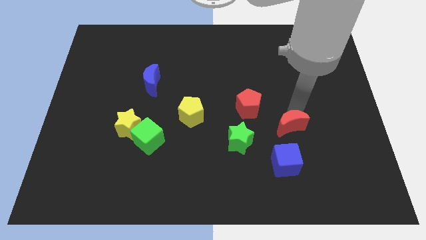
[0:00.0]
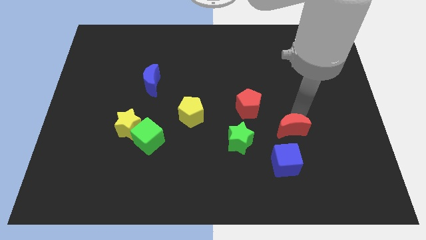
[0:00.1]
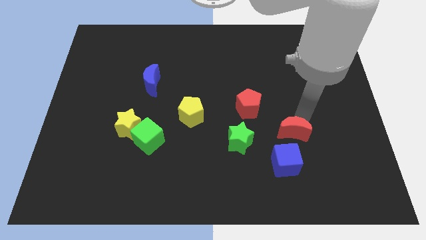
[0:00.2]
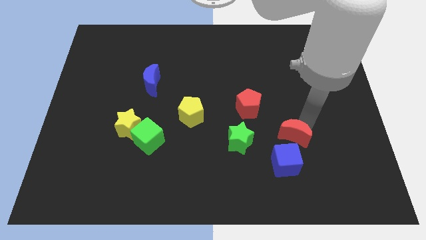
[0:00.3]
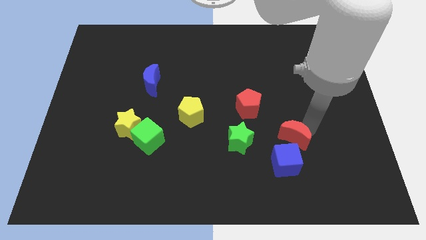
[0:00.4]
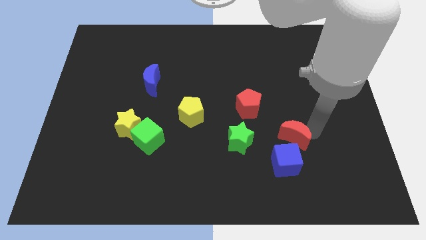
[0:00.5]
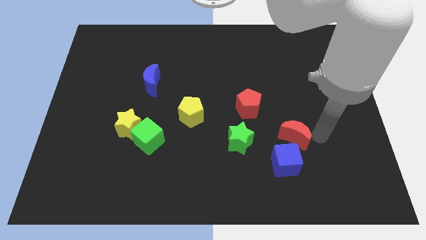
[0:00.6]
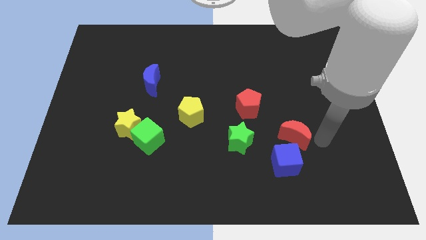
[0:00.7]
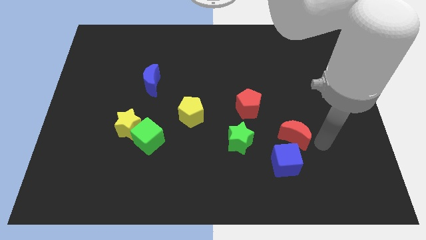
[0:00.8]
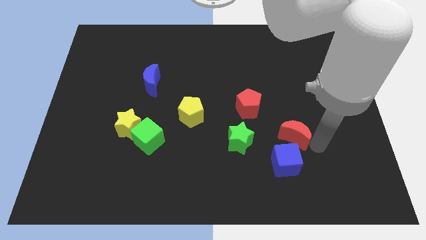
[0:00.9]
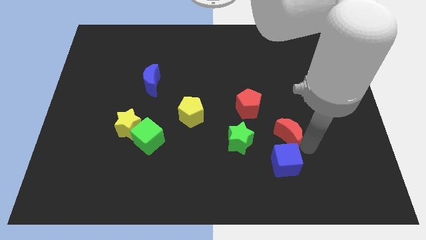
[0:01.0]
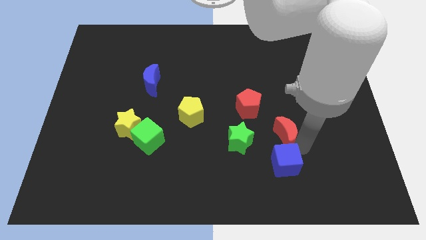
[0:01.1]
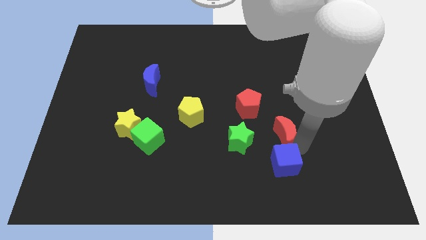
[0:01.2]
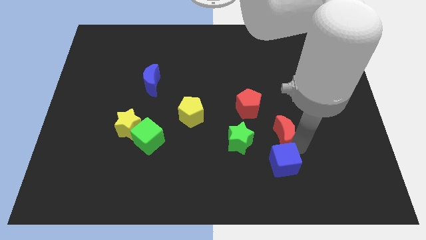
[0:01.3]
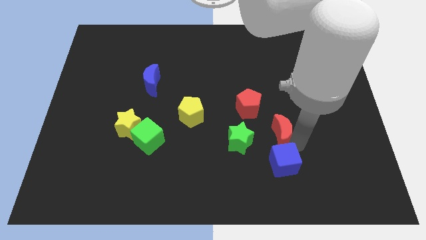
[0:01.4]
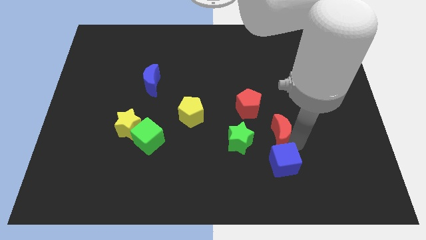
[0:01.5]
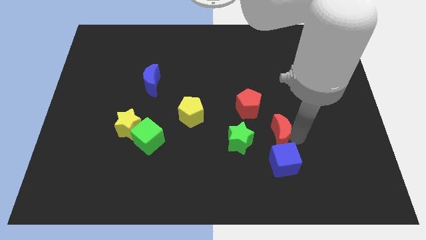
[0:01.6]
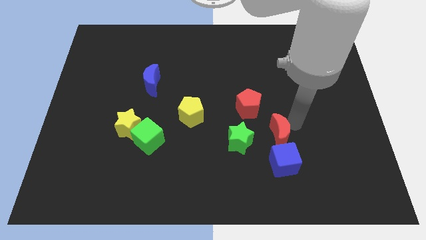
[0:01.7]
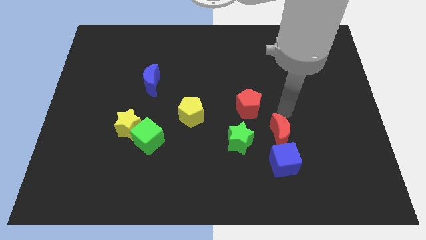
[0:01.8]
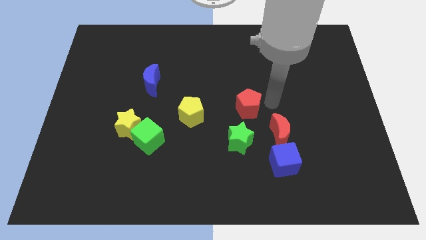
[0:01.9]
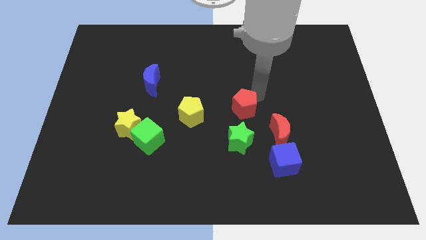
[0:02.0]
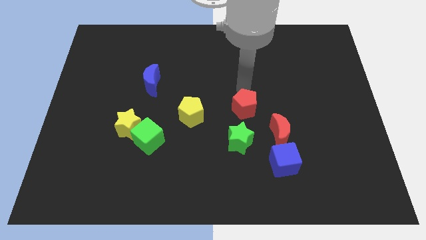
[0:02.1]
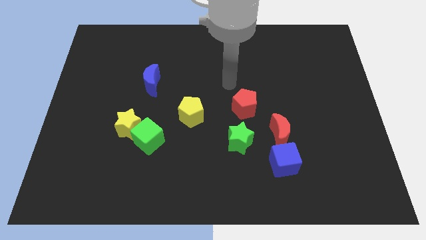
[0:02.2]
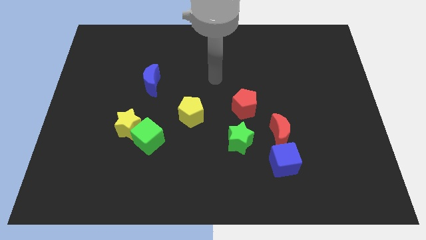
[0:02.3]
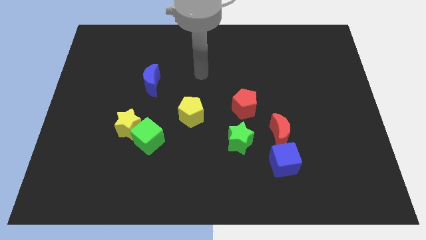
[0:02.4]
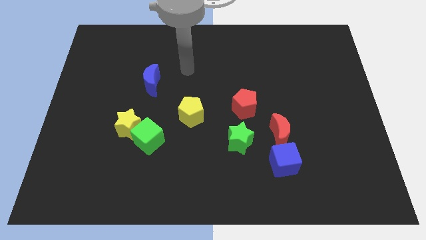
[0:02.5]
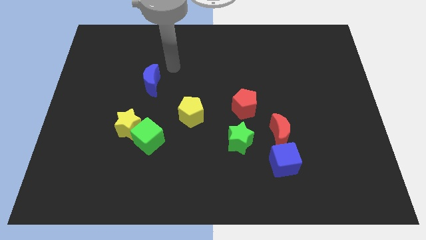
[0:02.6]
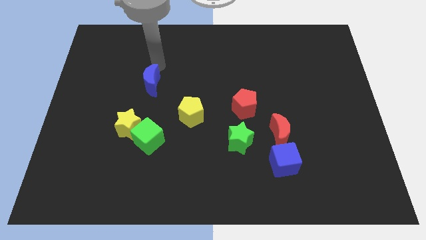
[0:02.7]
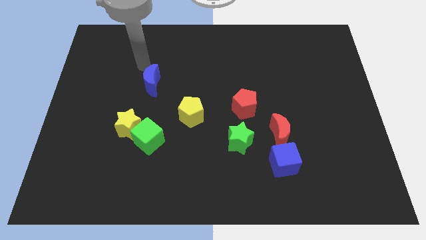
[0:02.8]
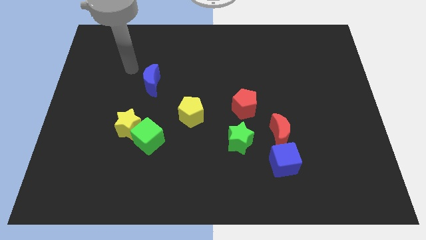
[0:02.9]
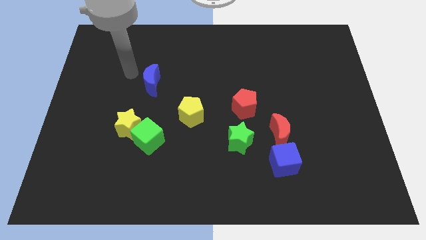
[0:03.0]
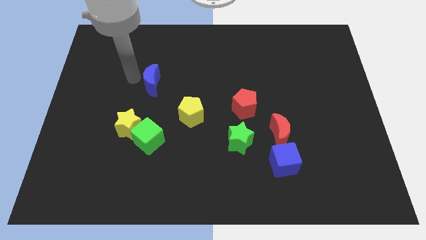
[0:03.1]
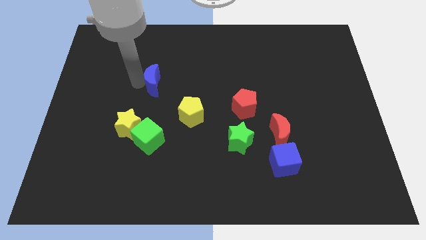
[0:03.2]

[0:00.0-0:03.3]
place the arm left to the blue moon

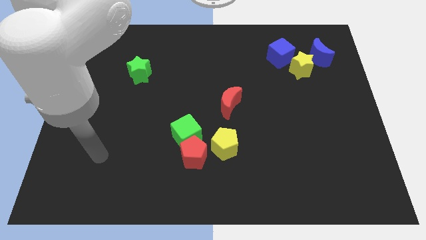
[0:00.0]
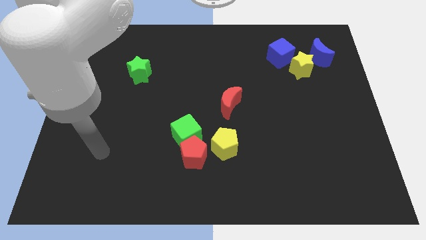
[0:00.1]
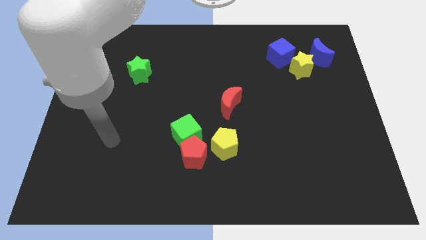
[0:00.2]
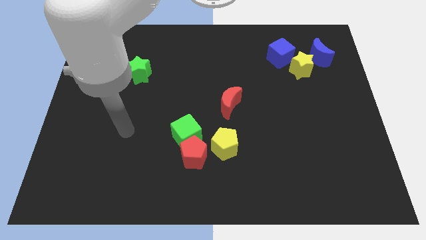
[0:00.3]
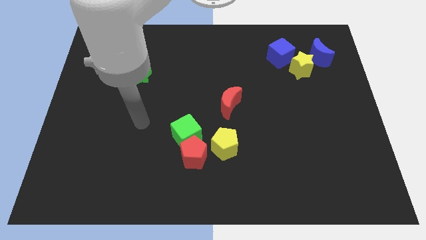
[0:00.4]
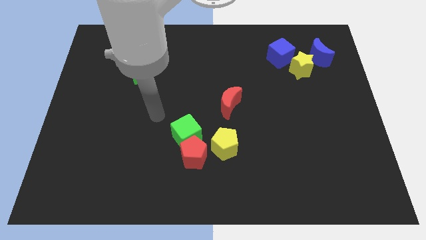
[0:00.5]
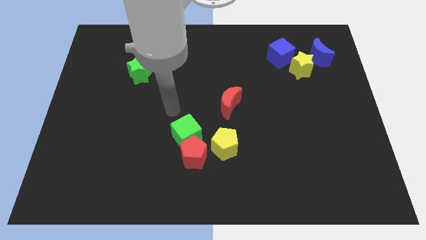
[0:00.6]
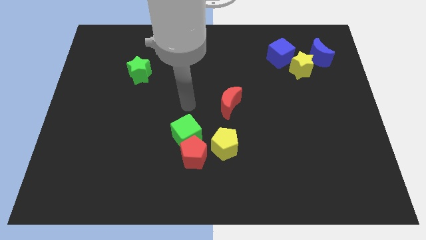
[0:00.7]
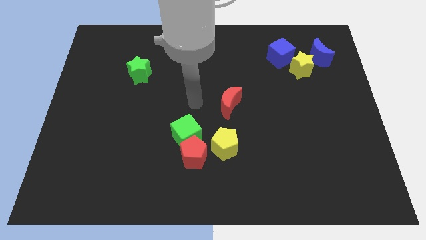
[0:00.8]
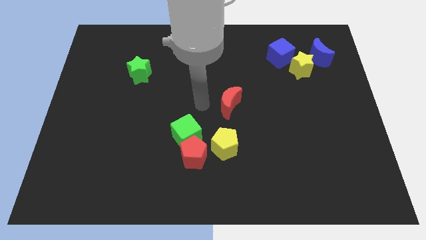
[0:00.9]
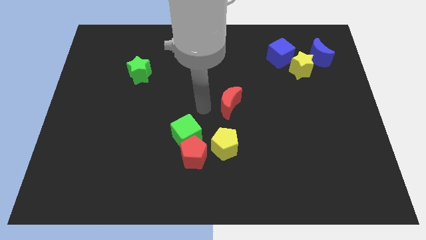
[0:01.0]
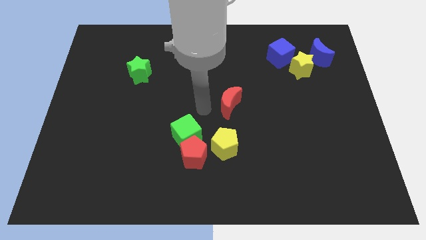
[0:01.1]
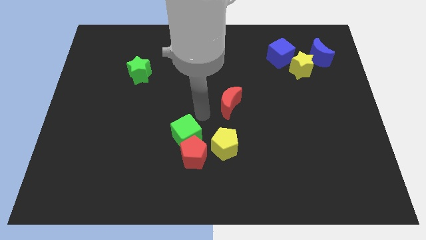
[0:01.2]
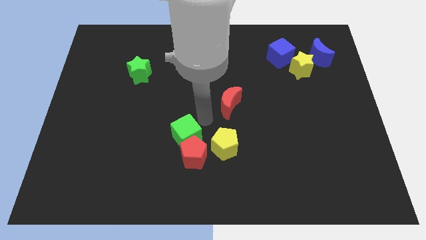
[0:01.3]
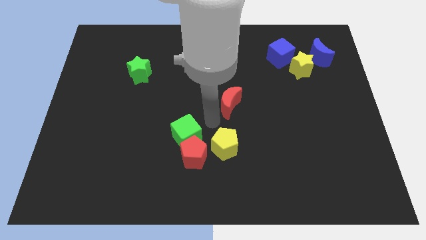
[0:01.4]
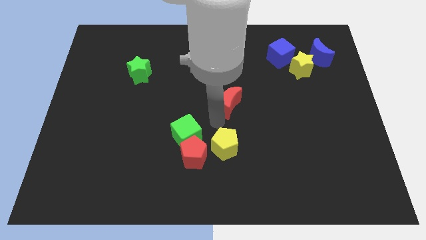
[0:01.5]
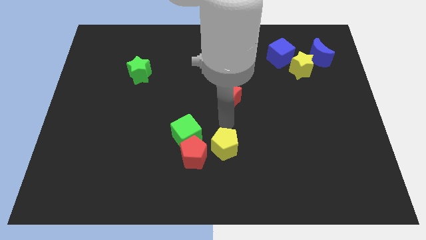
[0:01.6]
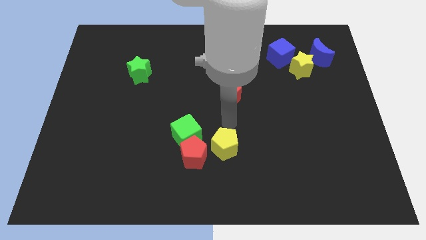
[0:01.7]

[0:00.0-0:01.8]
move your arm towards the red crescent

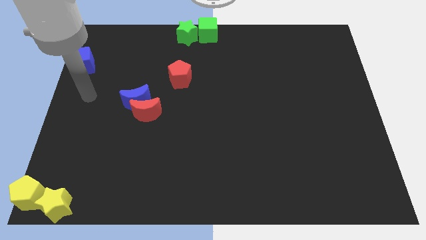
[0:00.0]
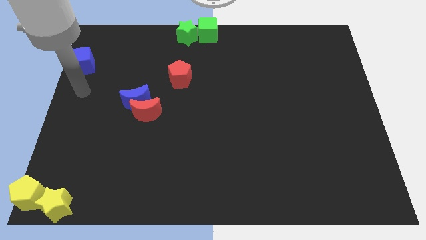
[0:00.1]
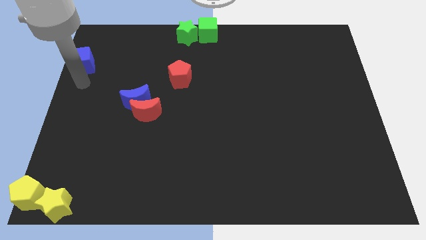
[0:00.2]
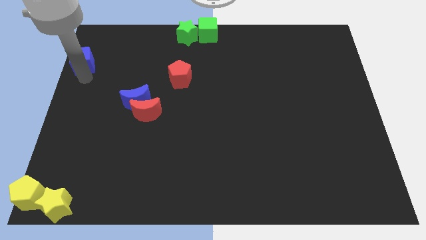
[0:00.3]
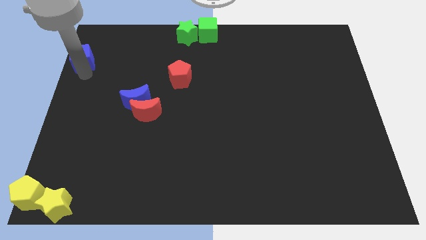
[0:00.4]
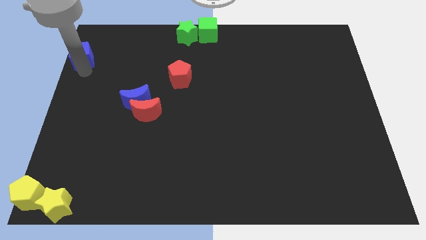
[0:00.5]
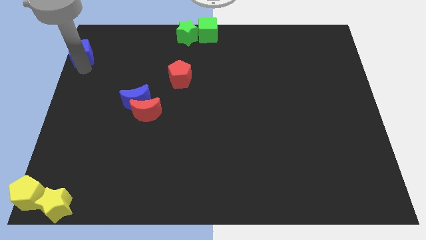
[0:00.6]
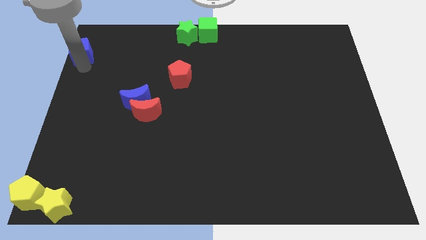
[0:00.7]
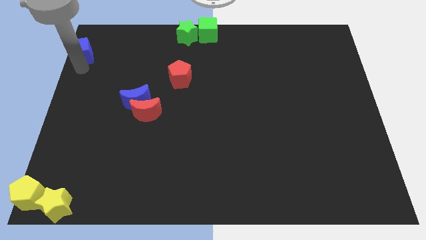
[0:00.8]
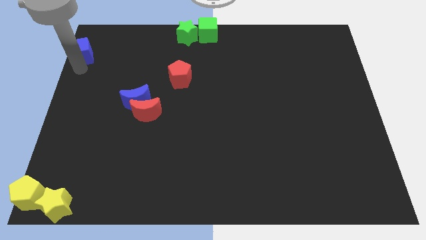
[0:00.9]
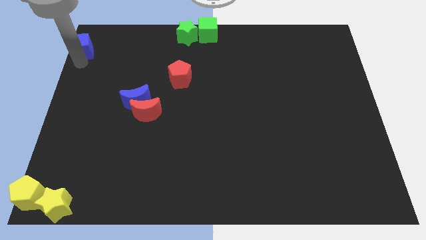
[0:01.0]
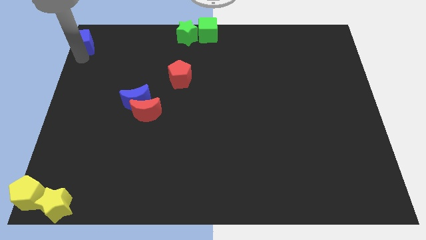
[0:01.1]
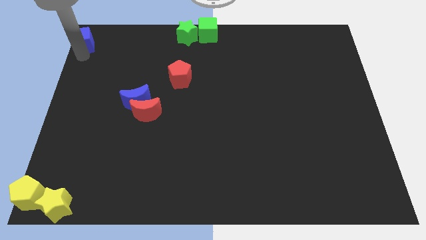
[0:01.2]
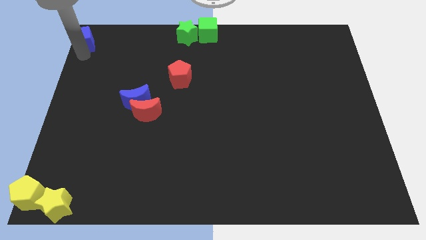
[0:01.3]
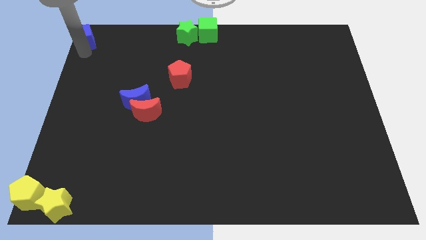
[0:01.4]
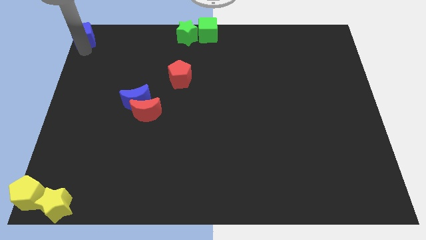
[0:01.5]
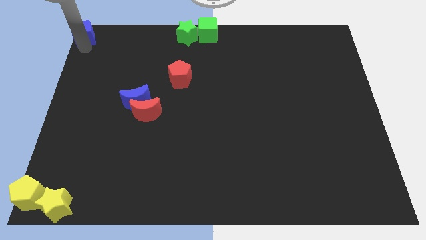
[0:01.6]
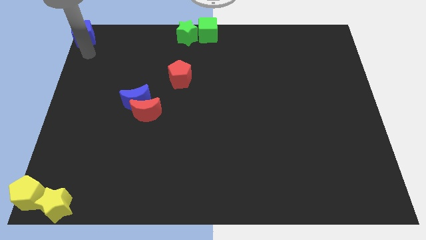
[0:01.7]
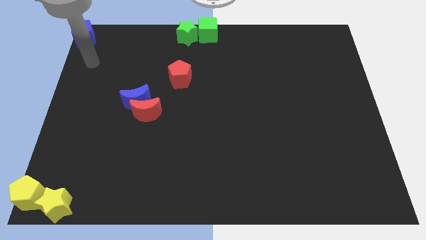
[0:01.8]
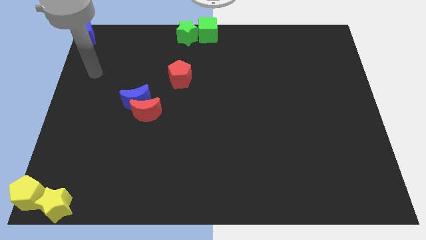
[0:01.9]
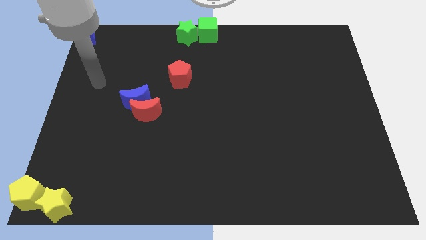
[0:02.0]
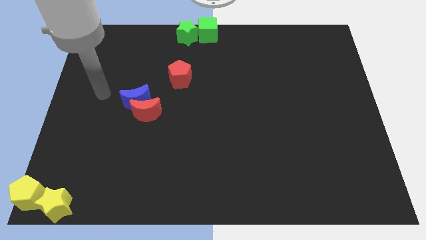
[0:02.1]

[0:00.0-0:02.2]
place the blue cube at the top left corner

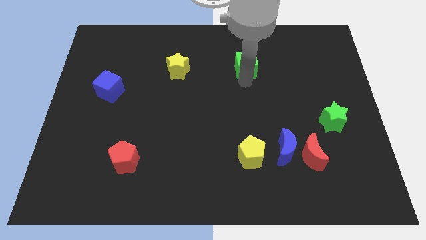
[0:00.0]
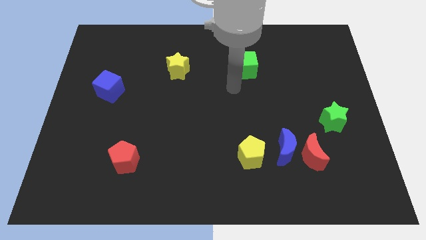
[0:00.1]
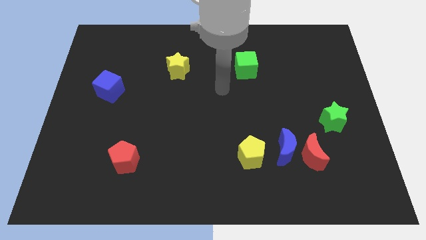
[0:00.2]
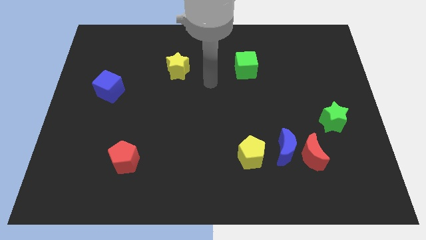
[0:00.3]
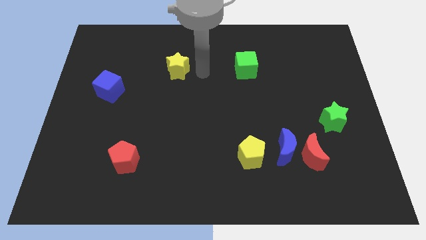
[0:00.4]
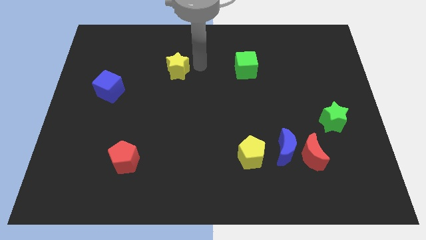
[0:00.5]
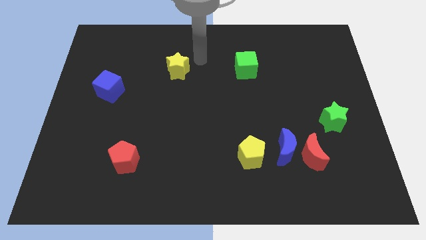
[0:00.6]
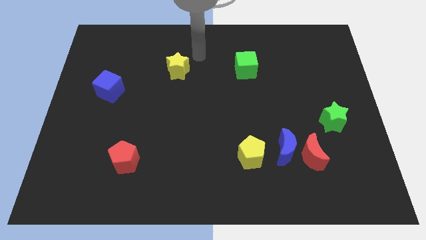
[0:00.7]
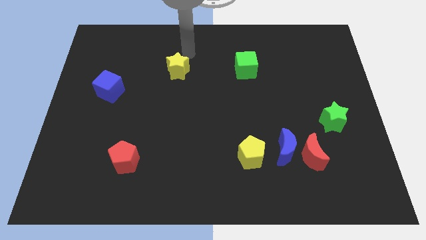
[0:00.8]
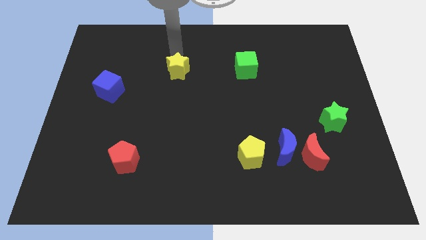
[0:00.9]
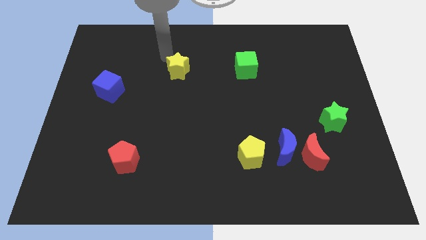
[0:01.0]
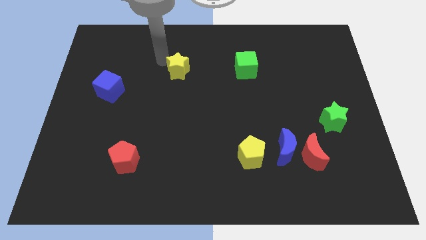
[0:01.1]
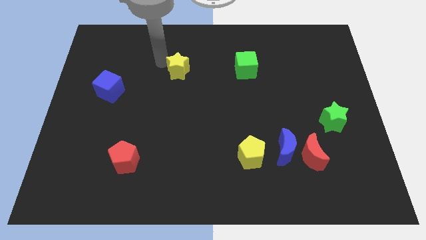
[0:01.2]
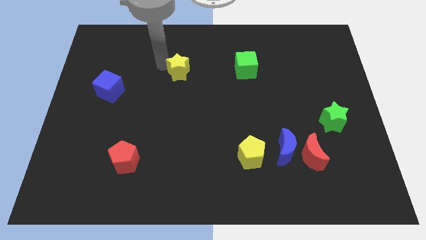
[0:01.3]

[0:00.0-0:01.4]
tap the yellow star

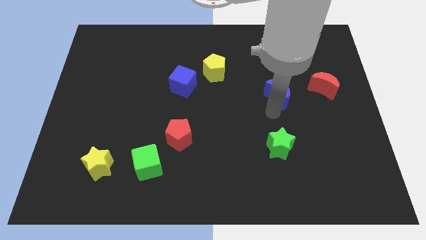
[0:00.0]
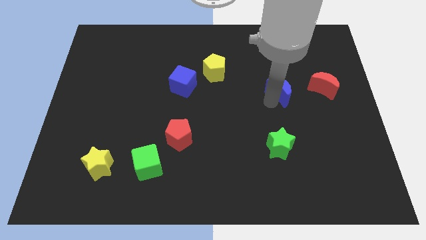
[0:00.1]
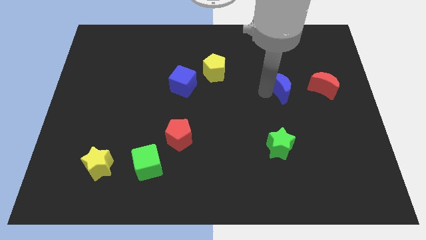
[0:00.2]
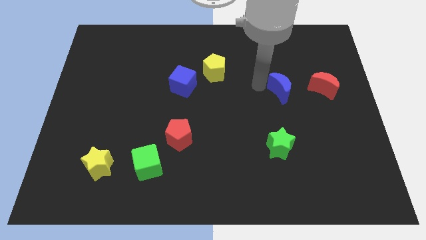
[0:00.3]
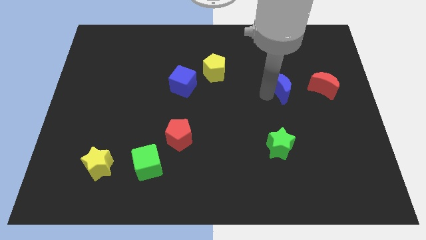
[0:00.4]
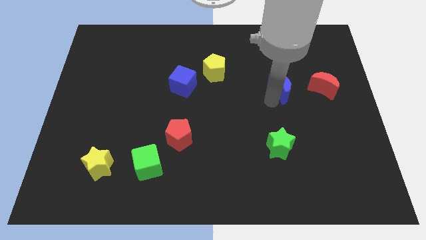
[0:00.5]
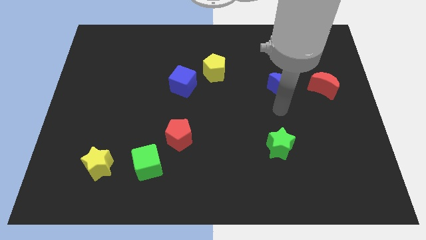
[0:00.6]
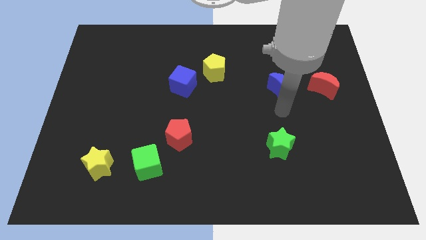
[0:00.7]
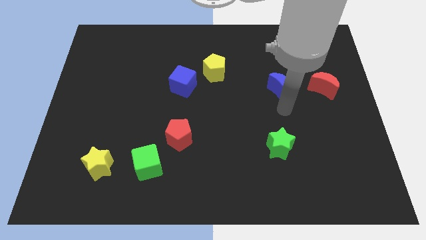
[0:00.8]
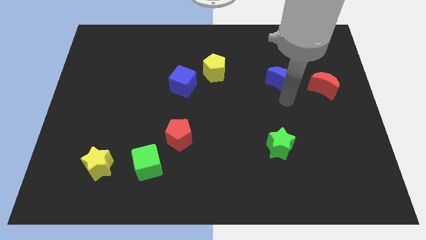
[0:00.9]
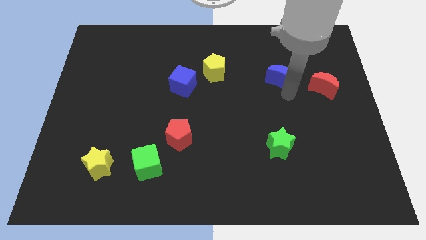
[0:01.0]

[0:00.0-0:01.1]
put the blue crescent in between the yellow pentagon and red crescent
